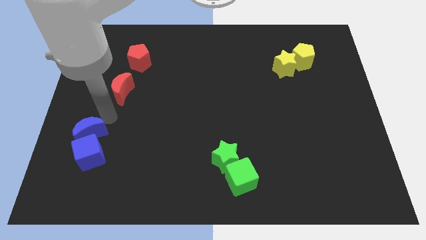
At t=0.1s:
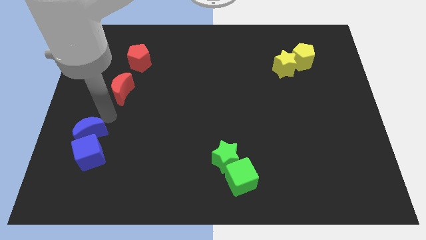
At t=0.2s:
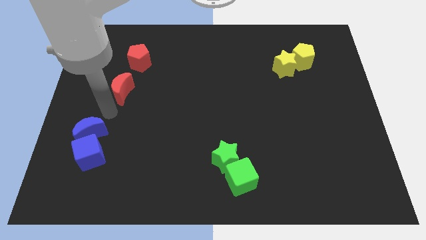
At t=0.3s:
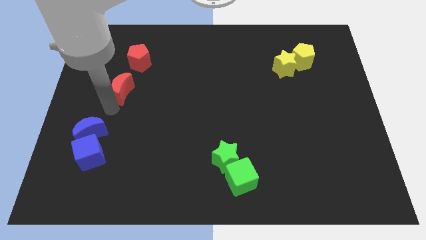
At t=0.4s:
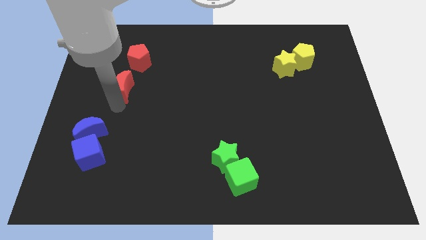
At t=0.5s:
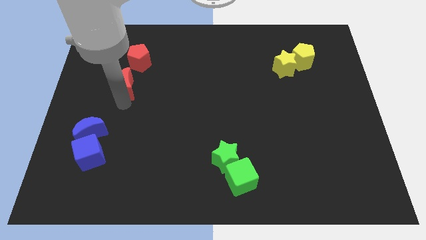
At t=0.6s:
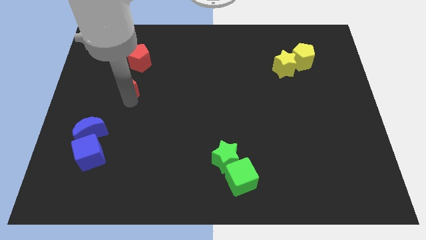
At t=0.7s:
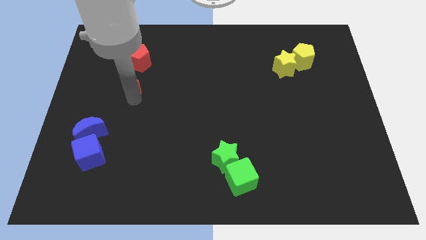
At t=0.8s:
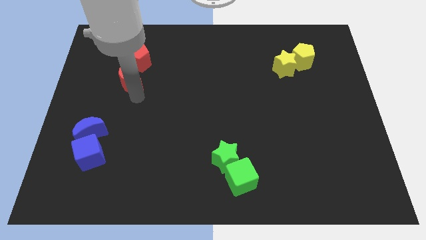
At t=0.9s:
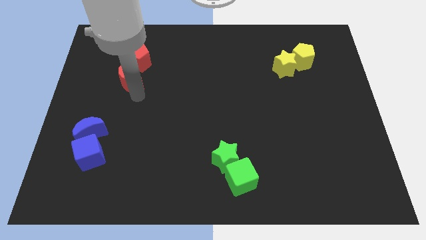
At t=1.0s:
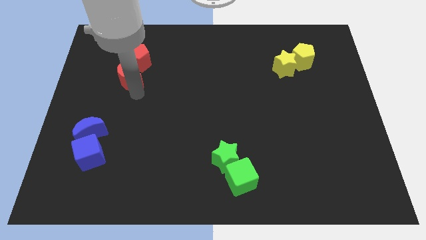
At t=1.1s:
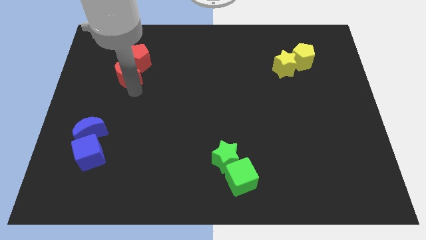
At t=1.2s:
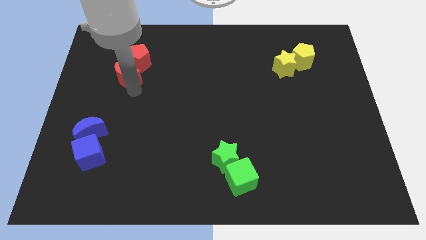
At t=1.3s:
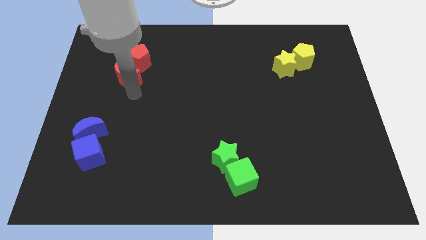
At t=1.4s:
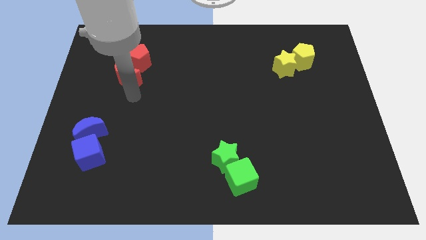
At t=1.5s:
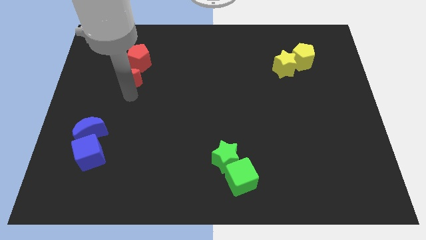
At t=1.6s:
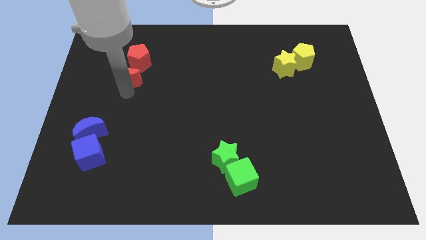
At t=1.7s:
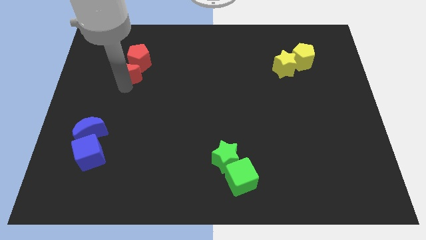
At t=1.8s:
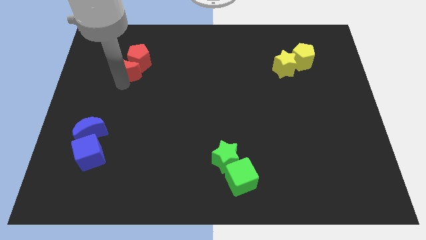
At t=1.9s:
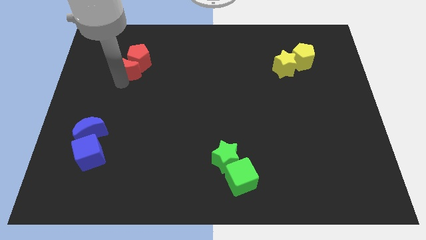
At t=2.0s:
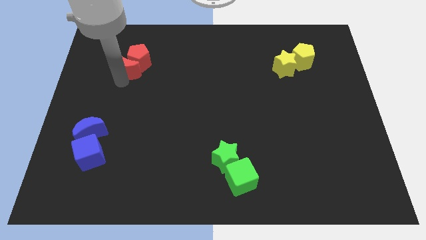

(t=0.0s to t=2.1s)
push red moon into red pentagon

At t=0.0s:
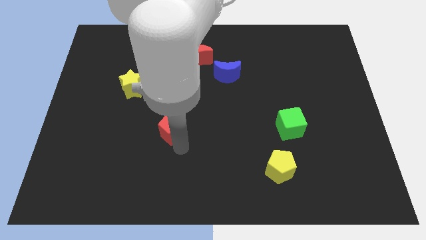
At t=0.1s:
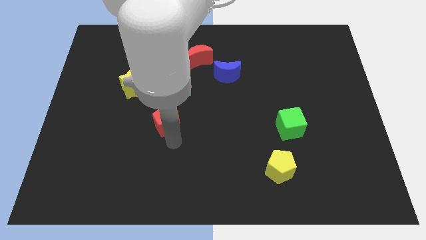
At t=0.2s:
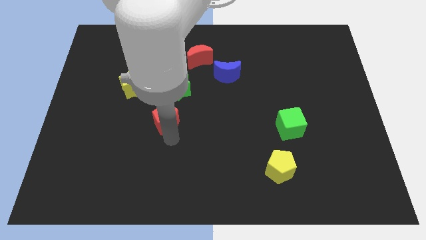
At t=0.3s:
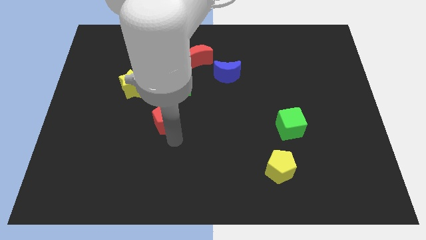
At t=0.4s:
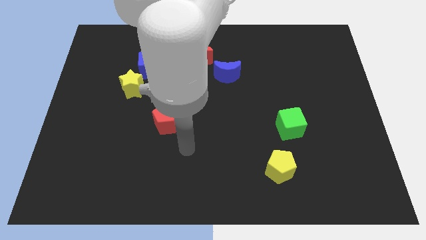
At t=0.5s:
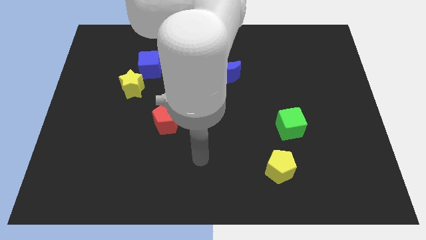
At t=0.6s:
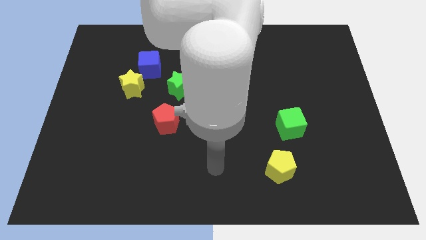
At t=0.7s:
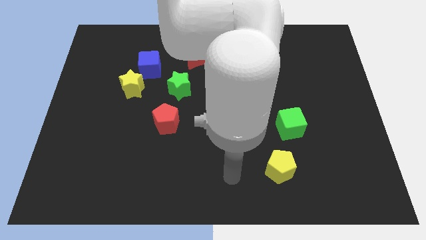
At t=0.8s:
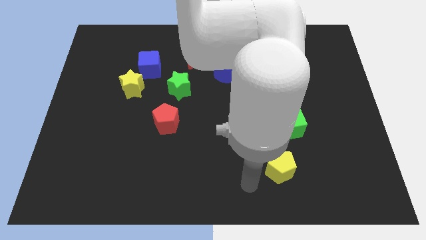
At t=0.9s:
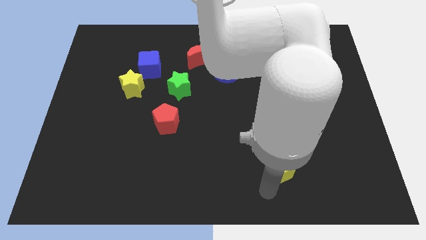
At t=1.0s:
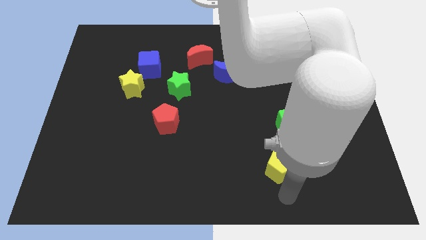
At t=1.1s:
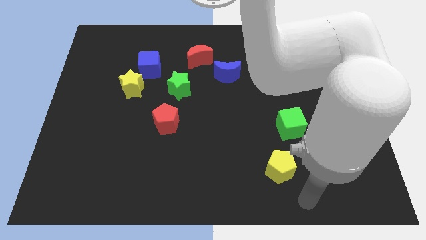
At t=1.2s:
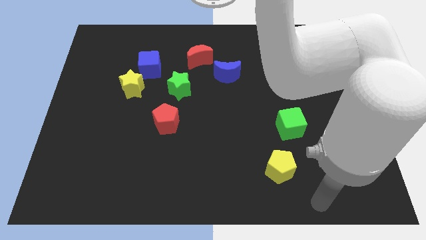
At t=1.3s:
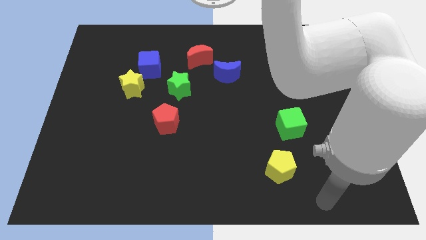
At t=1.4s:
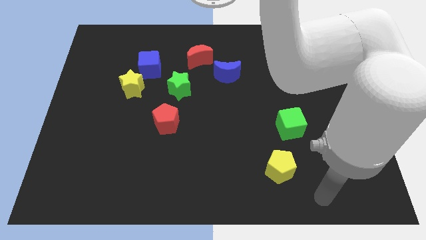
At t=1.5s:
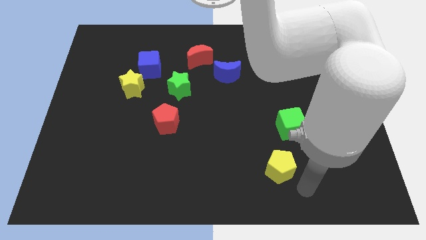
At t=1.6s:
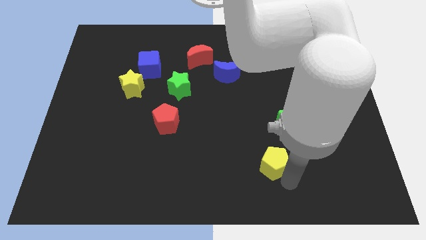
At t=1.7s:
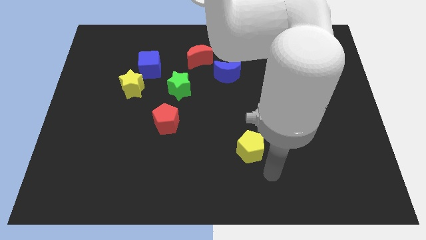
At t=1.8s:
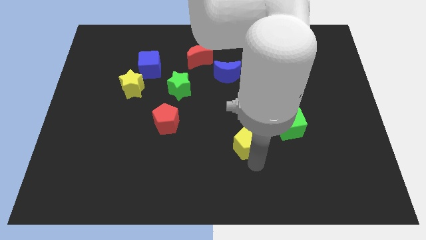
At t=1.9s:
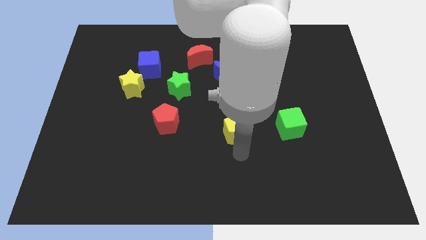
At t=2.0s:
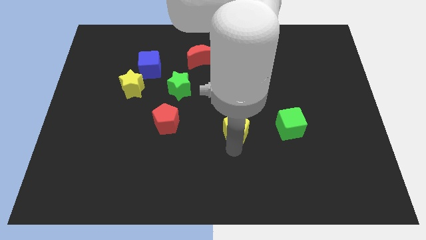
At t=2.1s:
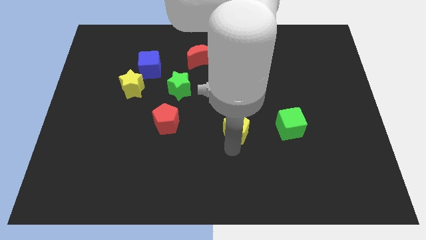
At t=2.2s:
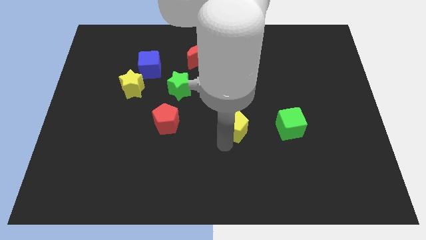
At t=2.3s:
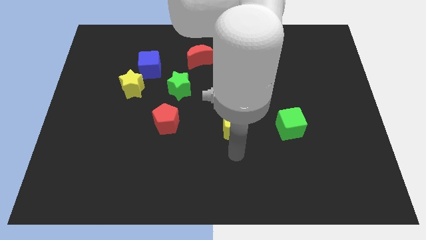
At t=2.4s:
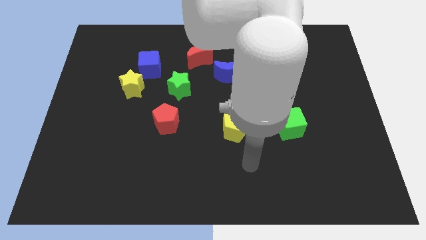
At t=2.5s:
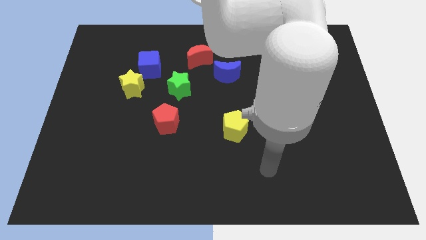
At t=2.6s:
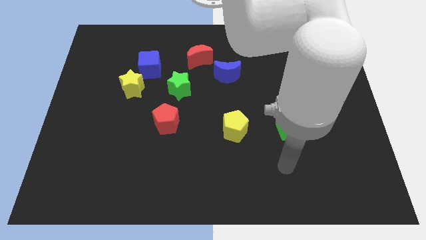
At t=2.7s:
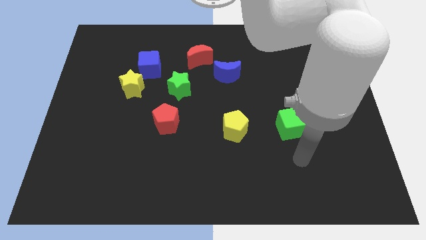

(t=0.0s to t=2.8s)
push the yellow pentagon to the left of the green cube

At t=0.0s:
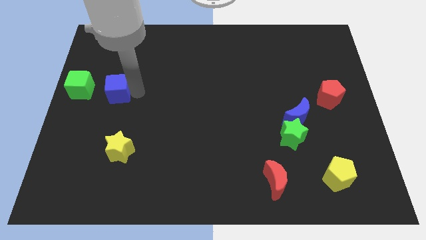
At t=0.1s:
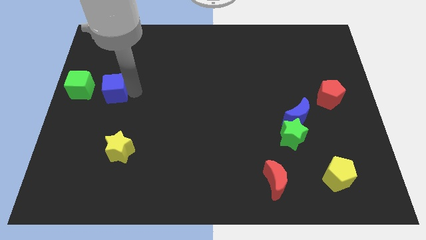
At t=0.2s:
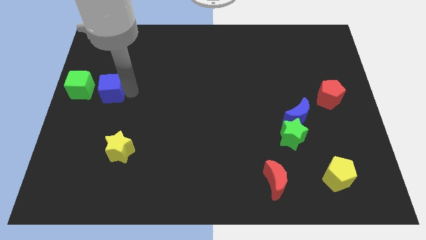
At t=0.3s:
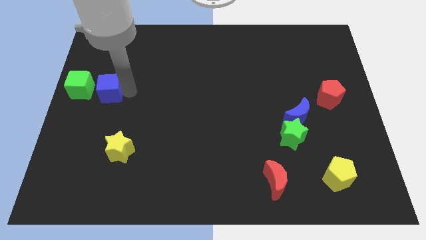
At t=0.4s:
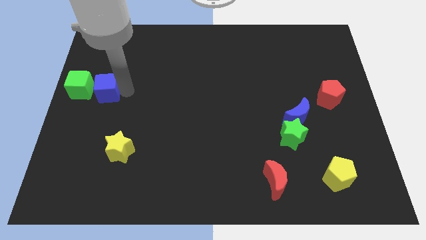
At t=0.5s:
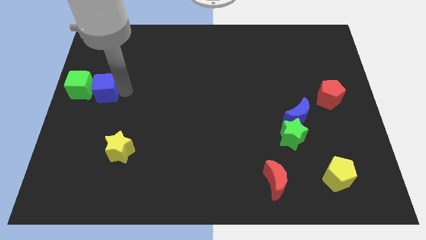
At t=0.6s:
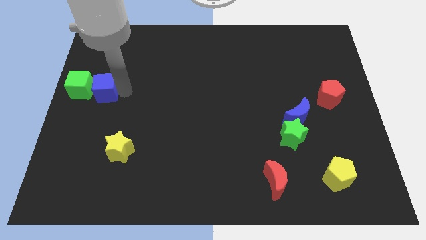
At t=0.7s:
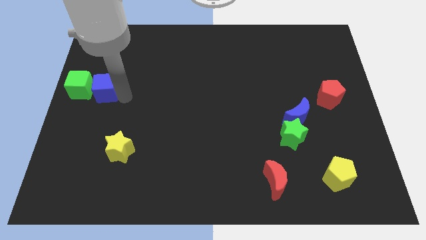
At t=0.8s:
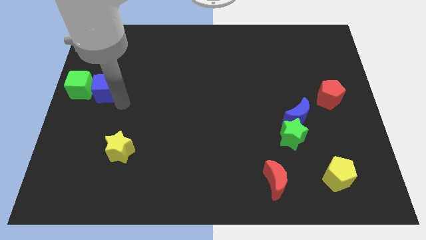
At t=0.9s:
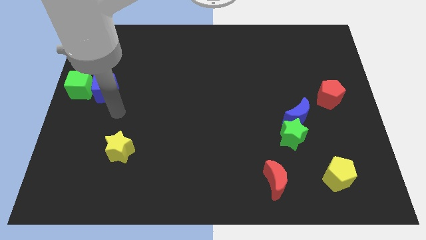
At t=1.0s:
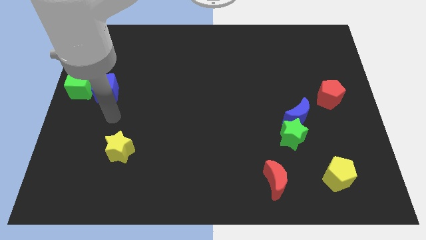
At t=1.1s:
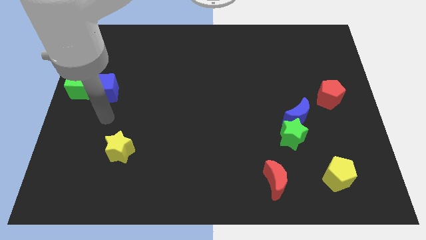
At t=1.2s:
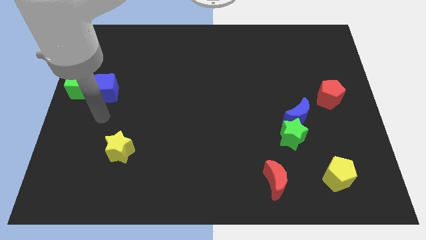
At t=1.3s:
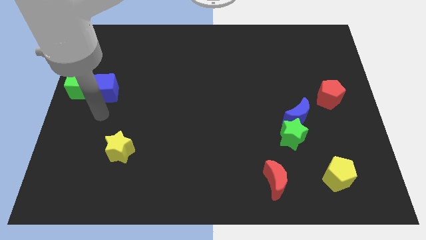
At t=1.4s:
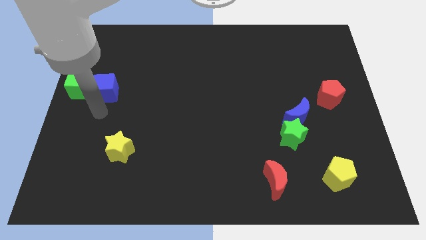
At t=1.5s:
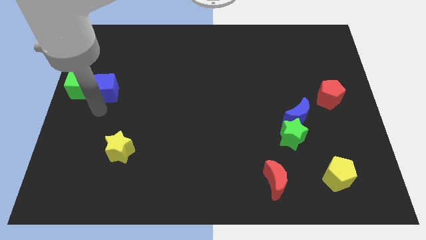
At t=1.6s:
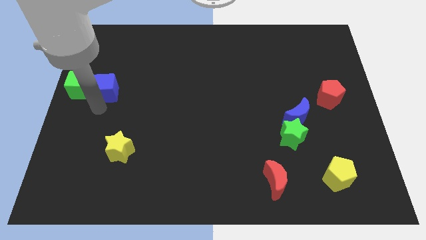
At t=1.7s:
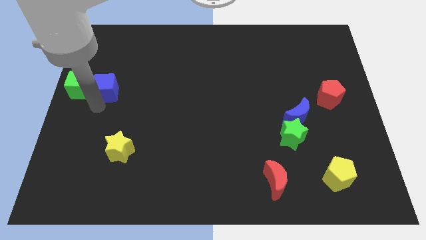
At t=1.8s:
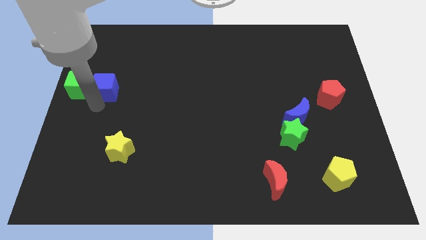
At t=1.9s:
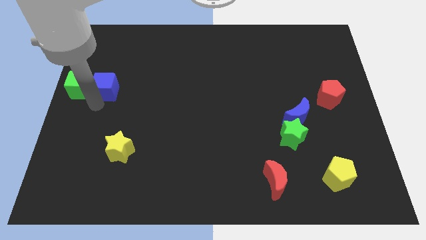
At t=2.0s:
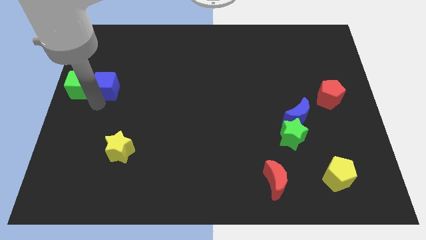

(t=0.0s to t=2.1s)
push blue cube near green cube

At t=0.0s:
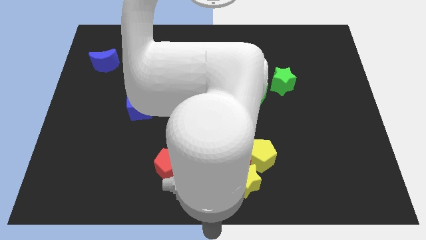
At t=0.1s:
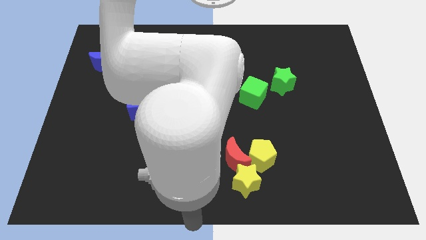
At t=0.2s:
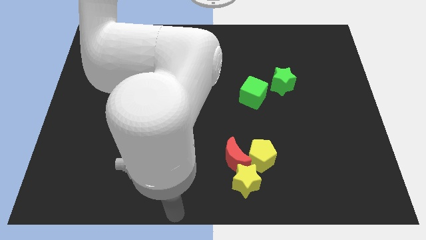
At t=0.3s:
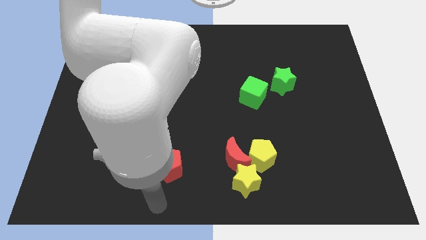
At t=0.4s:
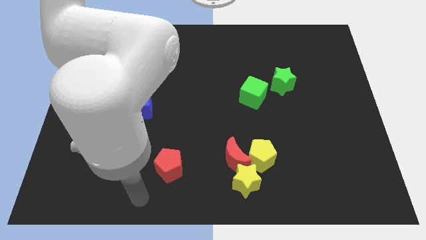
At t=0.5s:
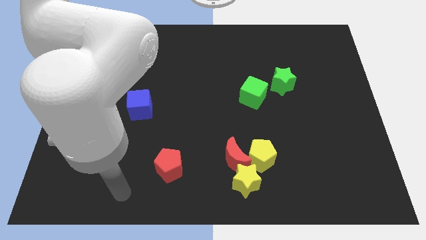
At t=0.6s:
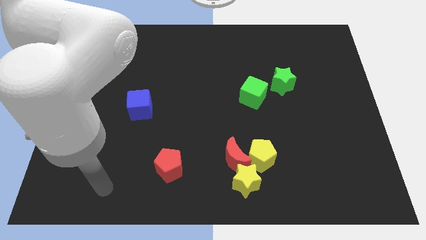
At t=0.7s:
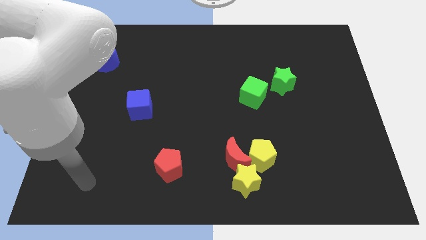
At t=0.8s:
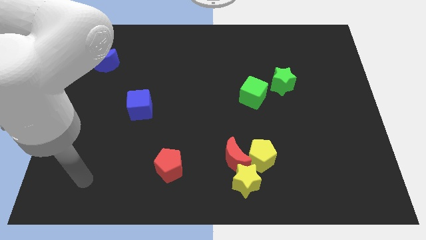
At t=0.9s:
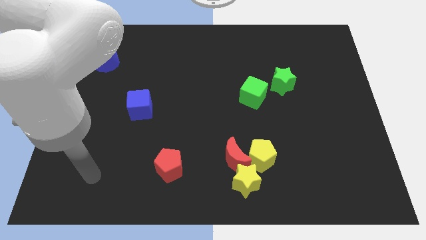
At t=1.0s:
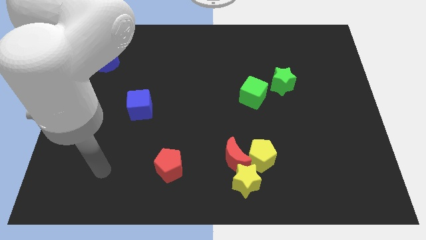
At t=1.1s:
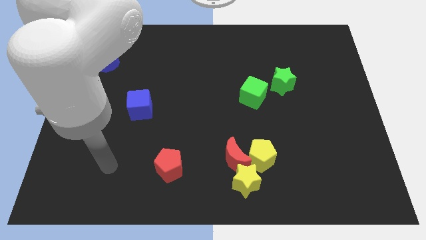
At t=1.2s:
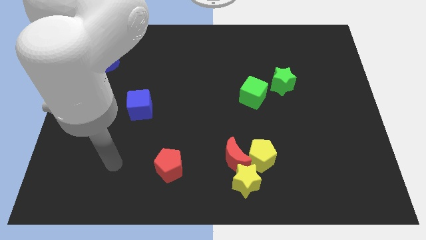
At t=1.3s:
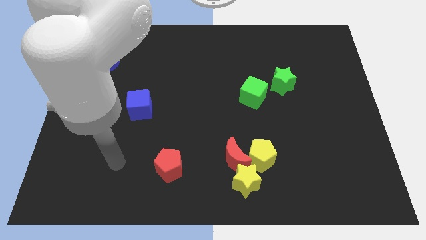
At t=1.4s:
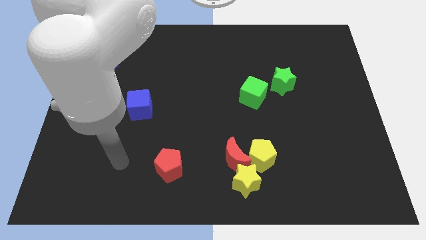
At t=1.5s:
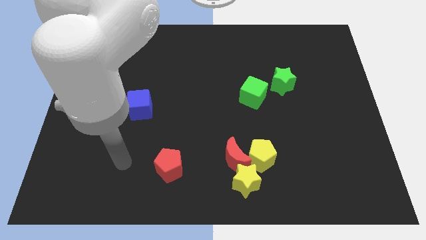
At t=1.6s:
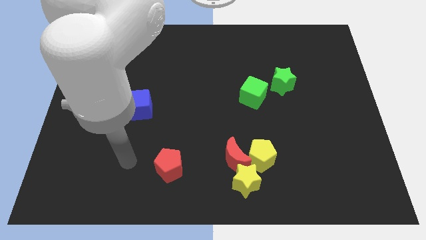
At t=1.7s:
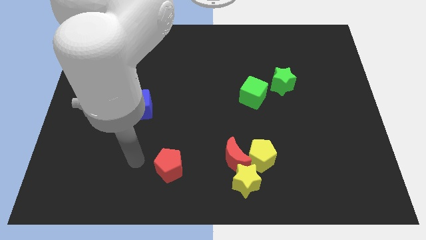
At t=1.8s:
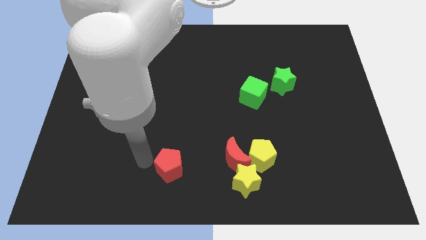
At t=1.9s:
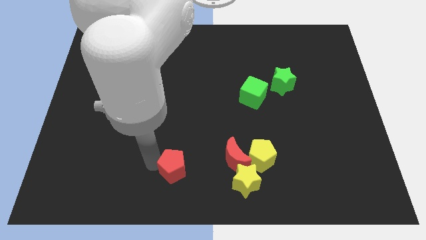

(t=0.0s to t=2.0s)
move the red pentagon slightly to the right of the board
